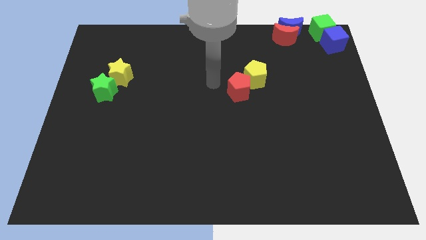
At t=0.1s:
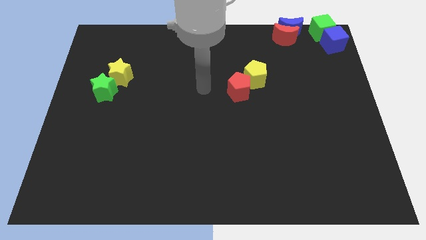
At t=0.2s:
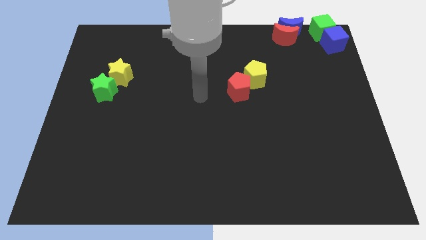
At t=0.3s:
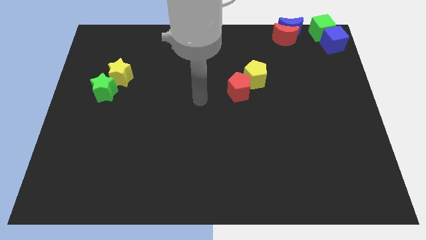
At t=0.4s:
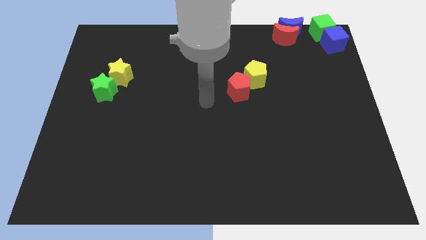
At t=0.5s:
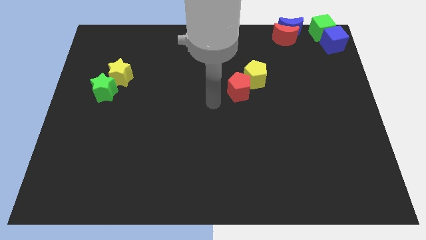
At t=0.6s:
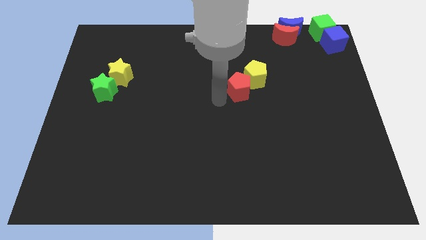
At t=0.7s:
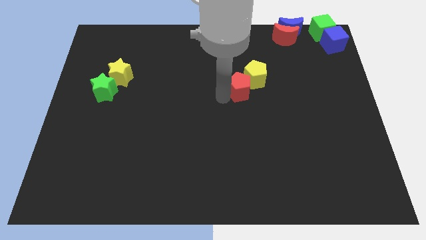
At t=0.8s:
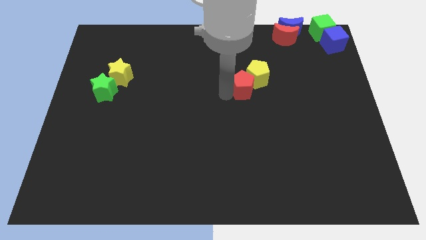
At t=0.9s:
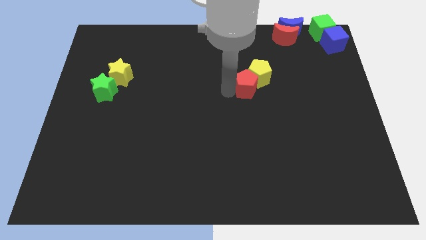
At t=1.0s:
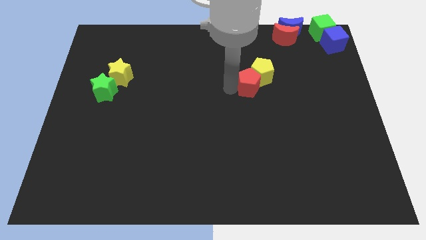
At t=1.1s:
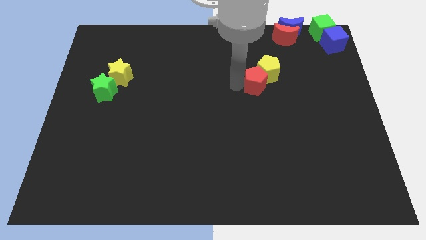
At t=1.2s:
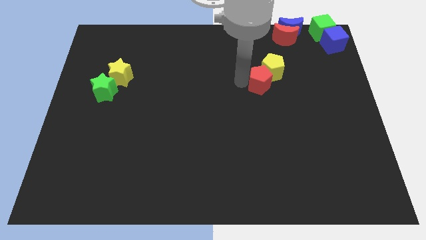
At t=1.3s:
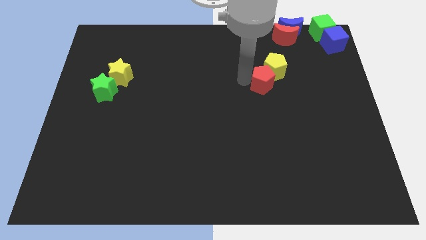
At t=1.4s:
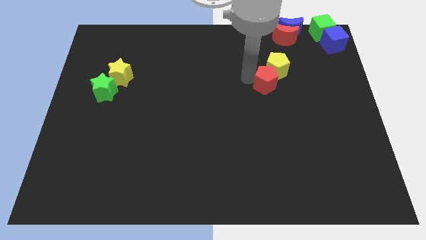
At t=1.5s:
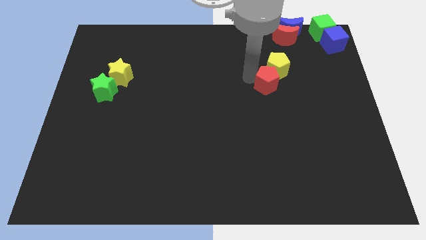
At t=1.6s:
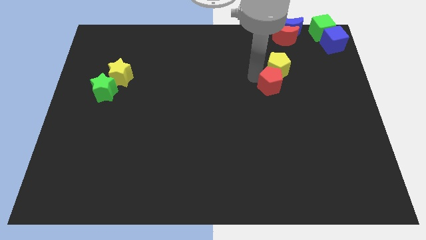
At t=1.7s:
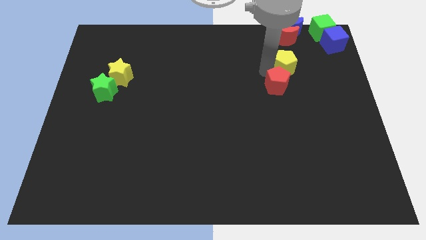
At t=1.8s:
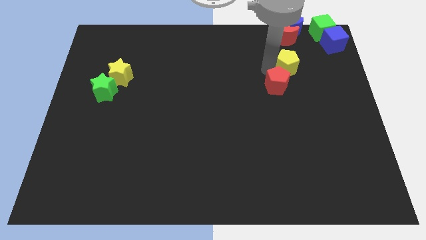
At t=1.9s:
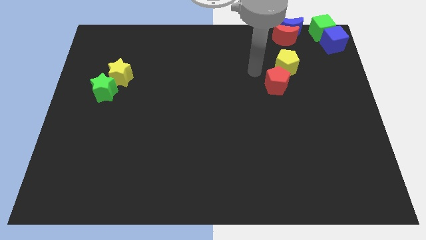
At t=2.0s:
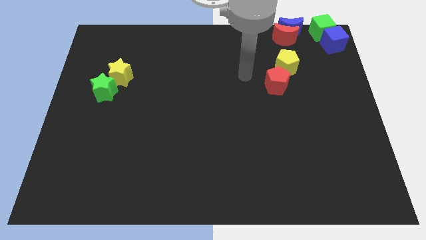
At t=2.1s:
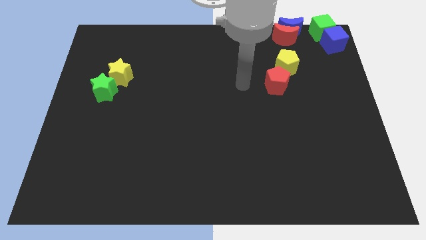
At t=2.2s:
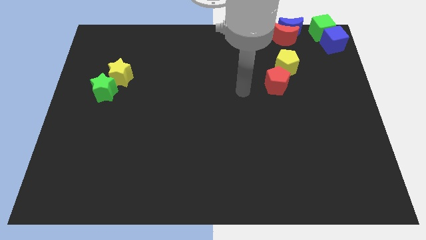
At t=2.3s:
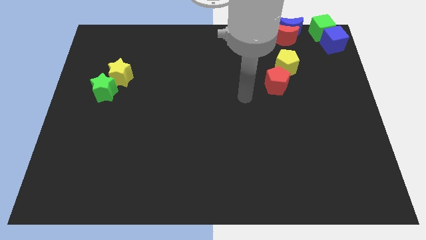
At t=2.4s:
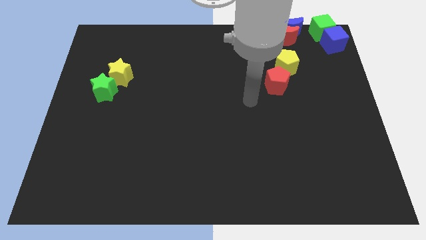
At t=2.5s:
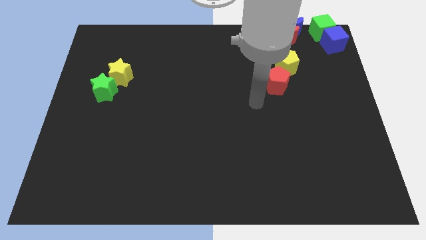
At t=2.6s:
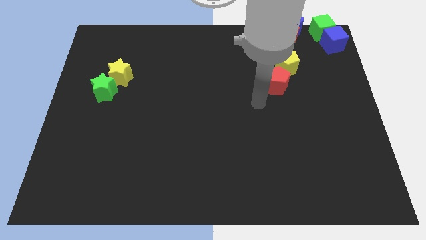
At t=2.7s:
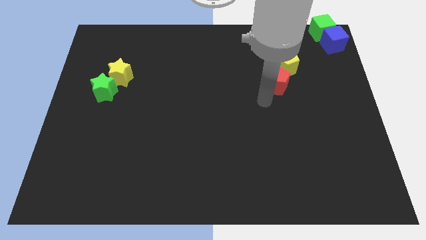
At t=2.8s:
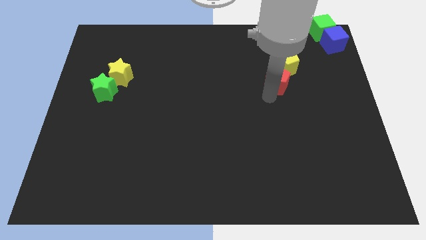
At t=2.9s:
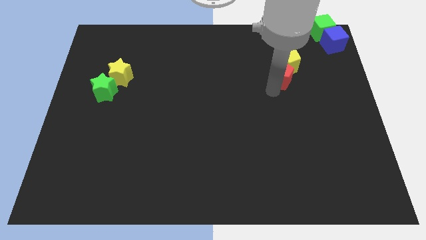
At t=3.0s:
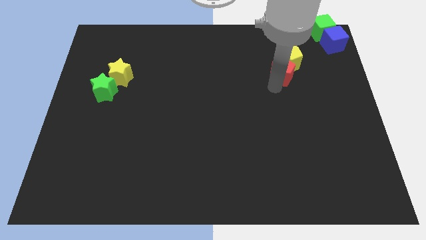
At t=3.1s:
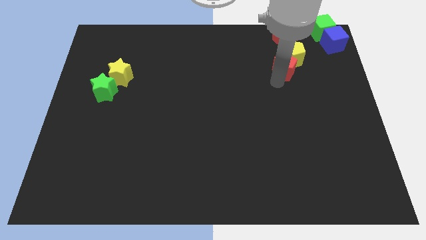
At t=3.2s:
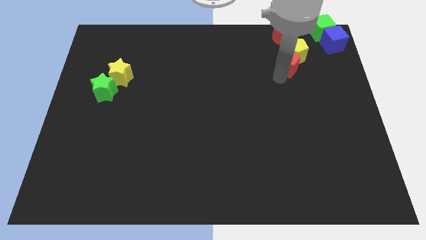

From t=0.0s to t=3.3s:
move pentagon pair towards cubes and crescents

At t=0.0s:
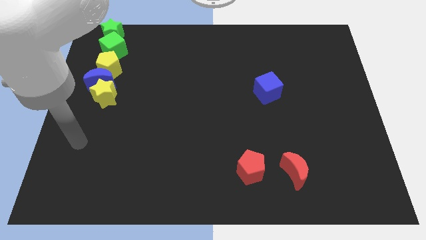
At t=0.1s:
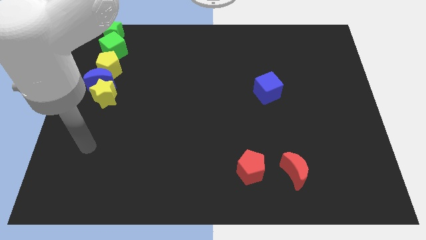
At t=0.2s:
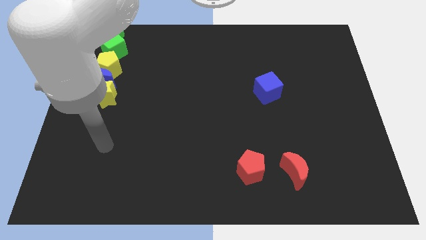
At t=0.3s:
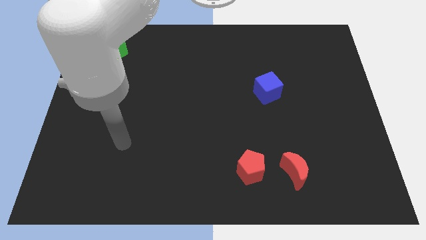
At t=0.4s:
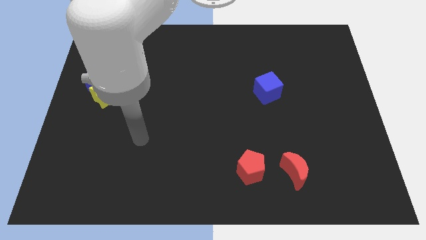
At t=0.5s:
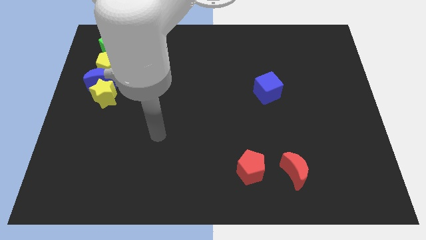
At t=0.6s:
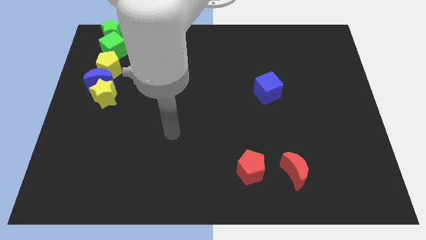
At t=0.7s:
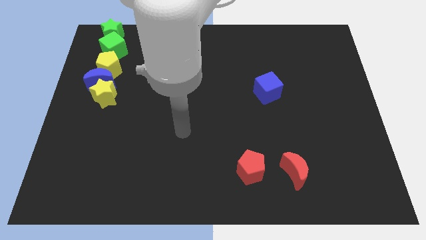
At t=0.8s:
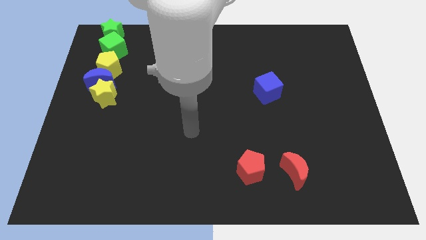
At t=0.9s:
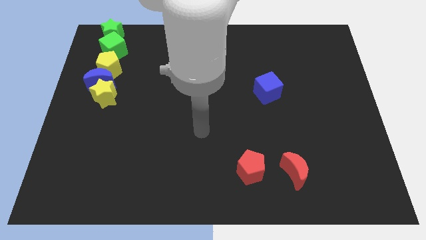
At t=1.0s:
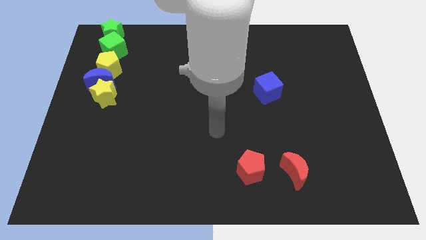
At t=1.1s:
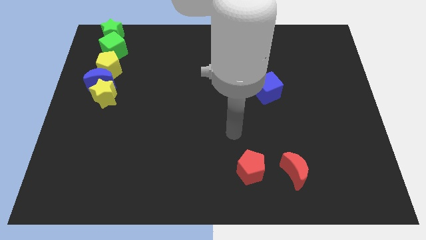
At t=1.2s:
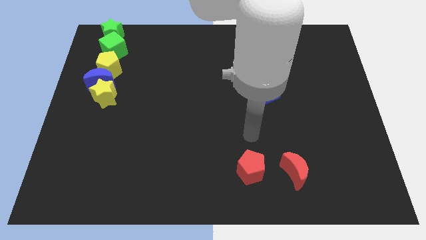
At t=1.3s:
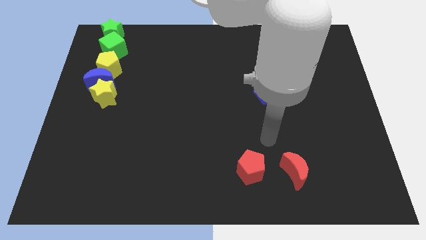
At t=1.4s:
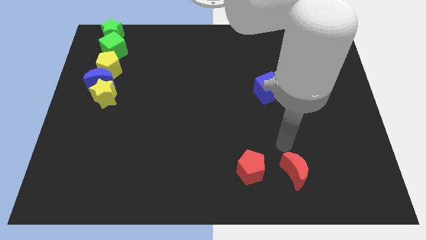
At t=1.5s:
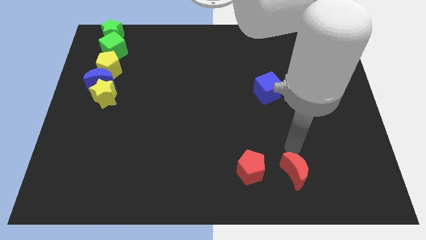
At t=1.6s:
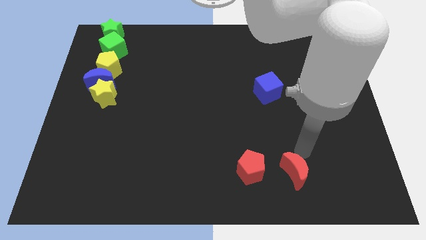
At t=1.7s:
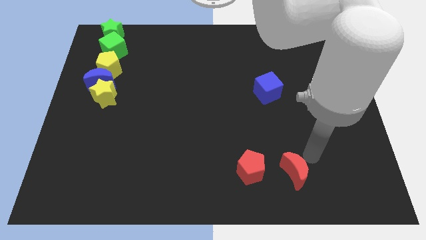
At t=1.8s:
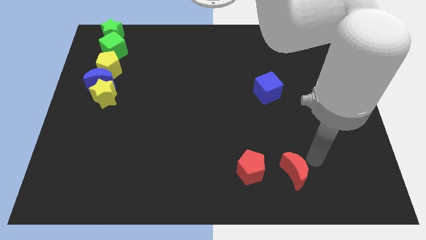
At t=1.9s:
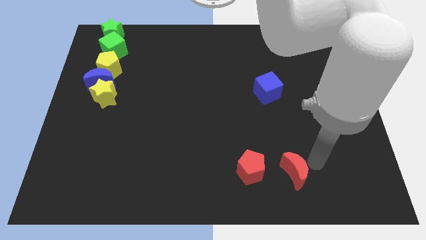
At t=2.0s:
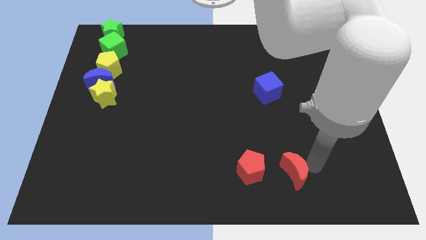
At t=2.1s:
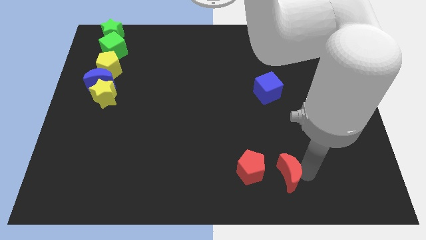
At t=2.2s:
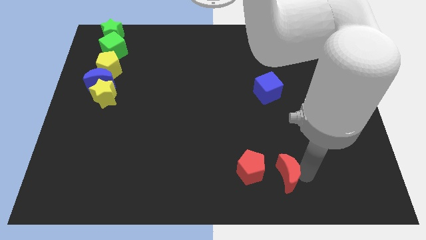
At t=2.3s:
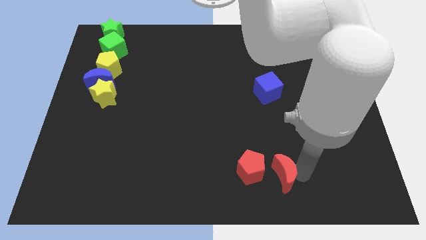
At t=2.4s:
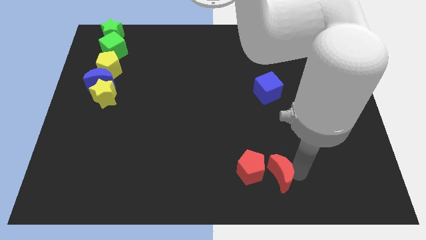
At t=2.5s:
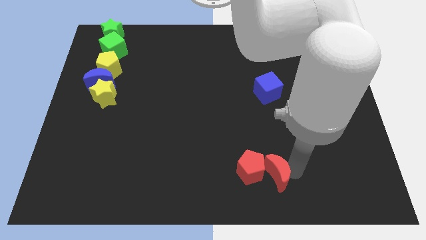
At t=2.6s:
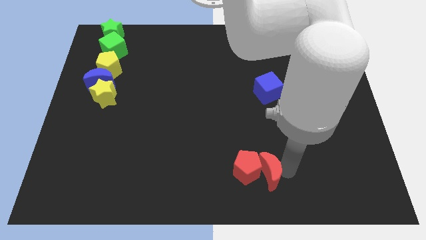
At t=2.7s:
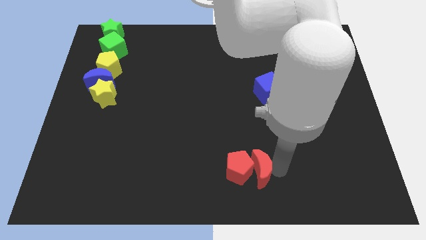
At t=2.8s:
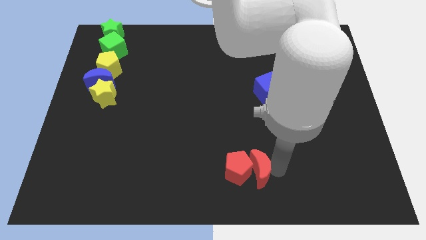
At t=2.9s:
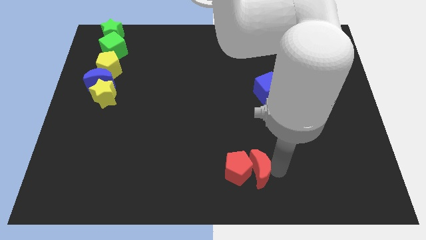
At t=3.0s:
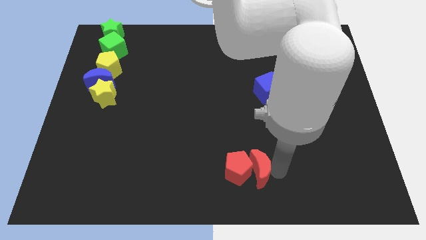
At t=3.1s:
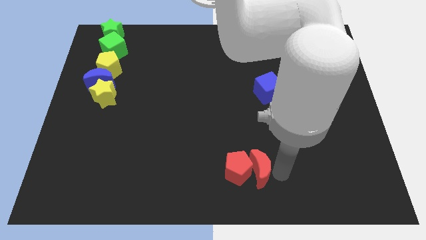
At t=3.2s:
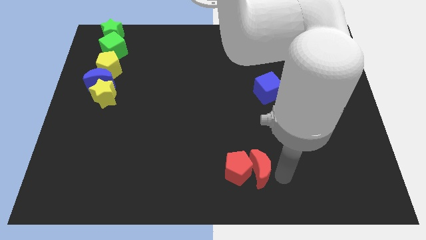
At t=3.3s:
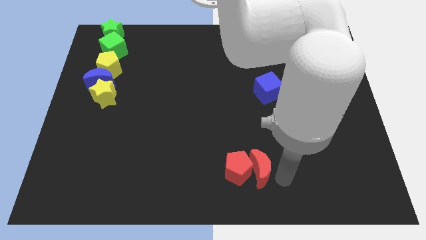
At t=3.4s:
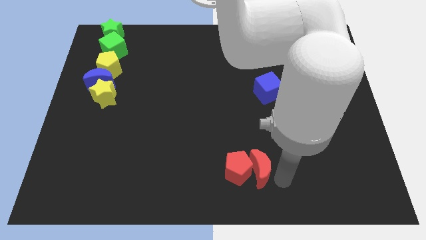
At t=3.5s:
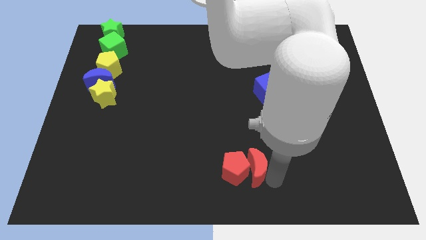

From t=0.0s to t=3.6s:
move the red moon into the right side of the red pentagon

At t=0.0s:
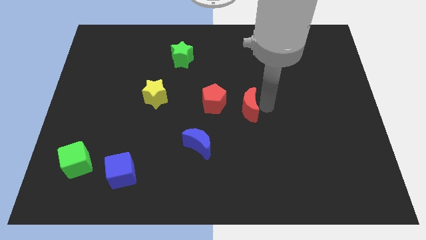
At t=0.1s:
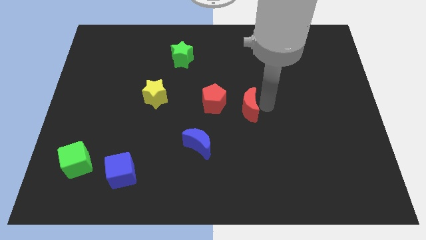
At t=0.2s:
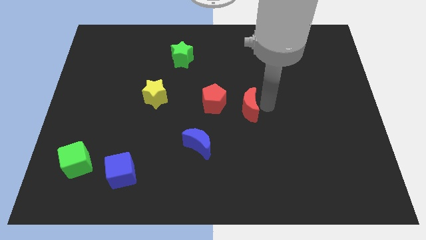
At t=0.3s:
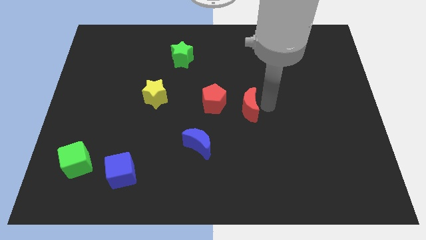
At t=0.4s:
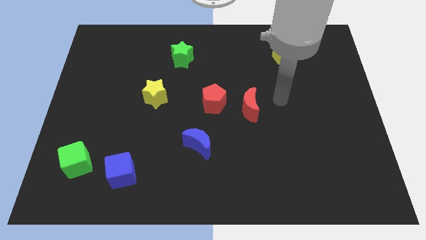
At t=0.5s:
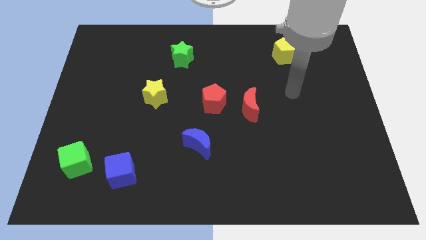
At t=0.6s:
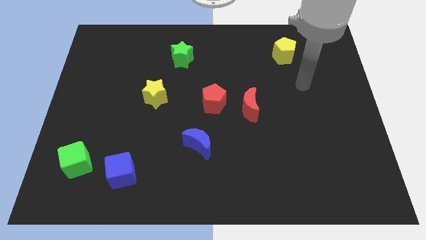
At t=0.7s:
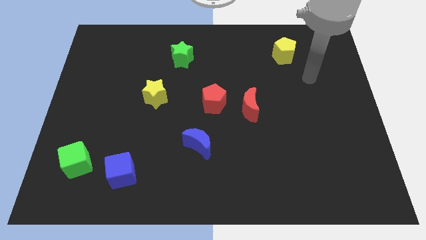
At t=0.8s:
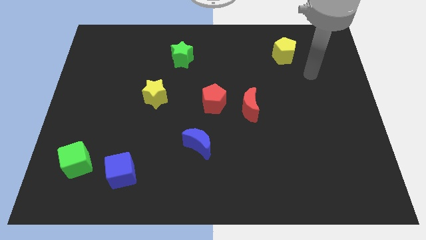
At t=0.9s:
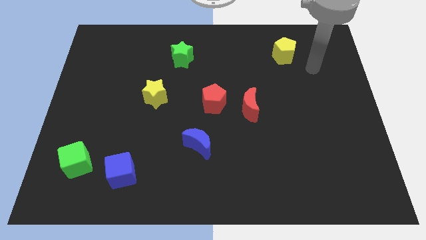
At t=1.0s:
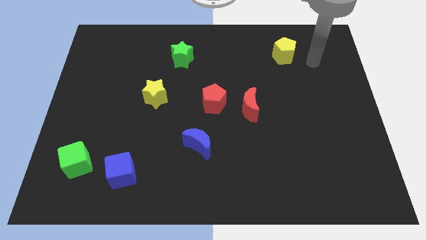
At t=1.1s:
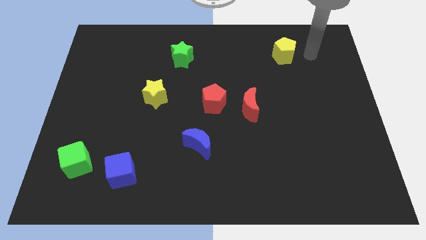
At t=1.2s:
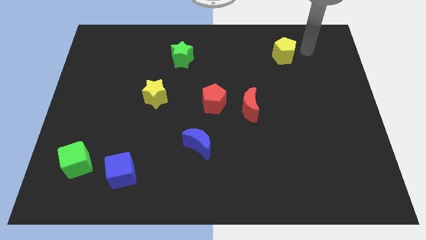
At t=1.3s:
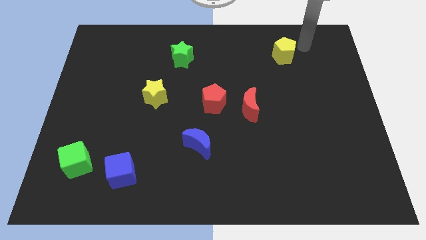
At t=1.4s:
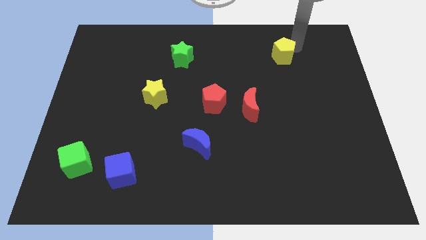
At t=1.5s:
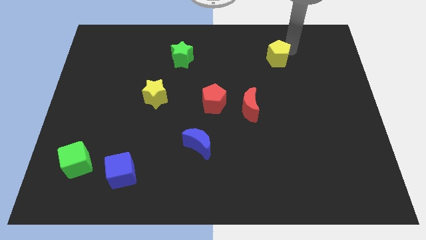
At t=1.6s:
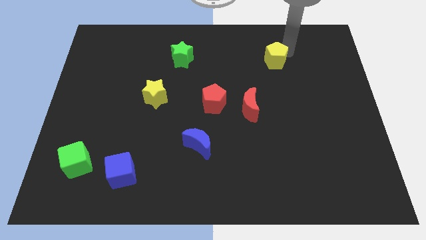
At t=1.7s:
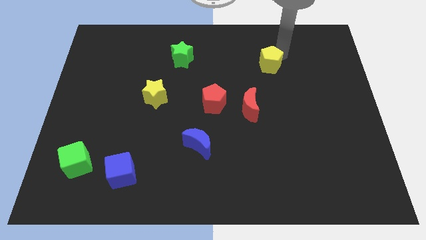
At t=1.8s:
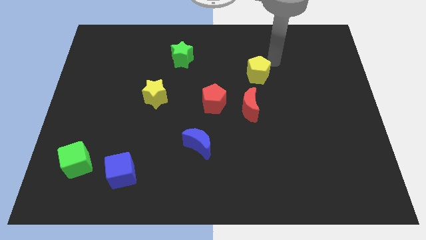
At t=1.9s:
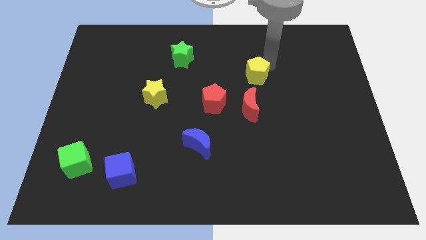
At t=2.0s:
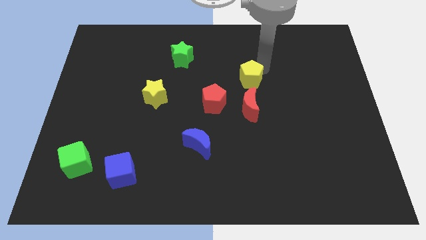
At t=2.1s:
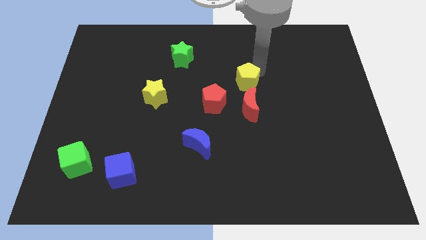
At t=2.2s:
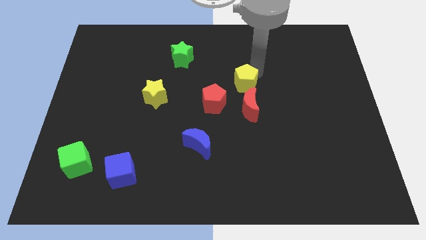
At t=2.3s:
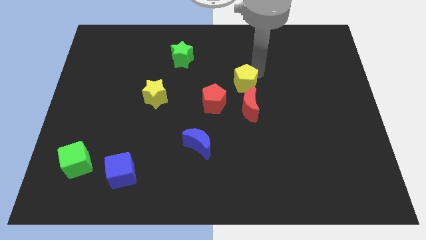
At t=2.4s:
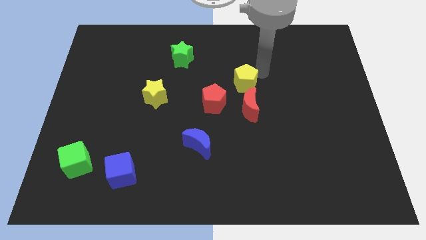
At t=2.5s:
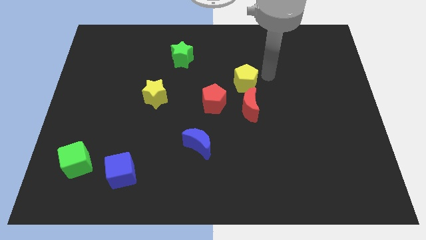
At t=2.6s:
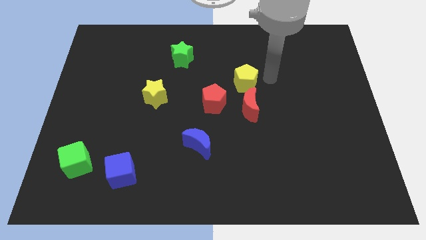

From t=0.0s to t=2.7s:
push the yellow pentagon to the top of the red crescent
